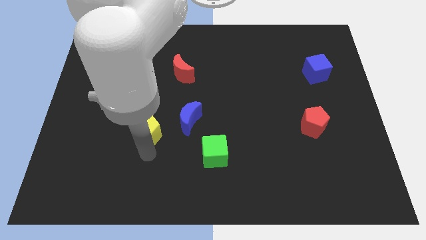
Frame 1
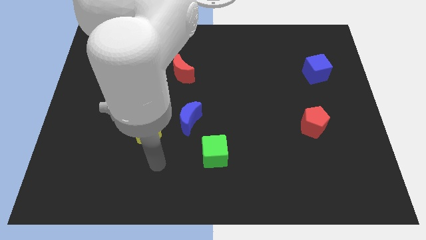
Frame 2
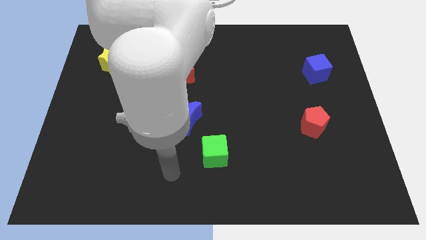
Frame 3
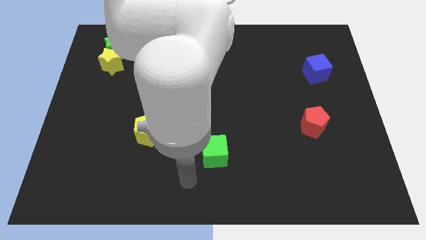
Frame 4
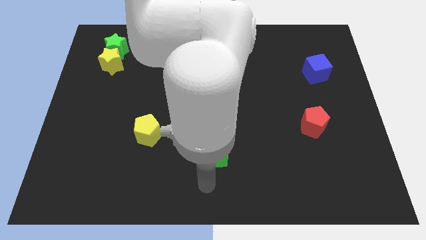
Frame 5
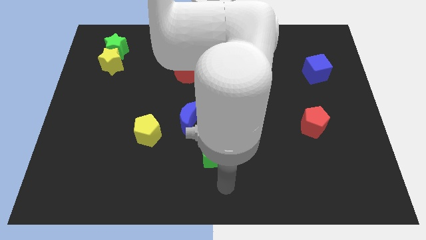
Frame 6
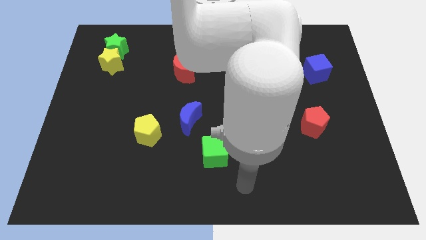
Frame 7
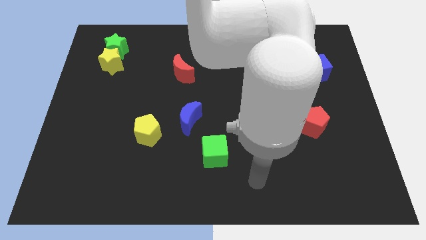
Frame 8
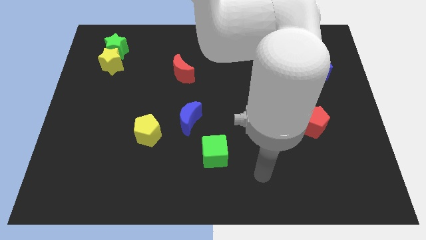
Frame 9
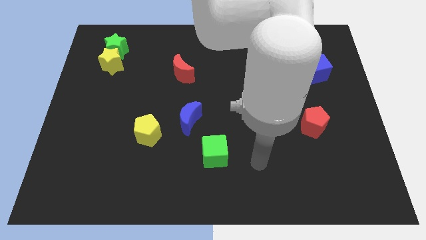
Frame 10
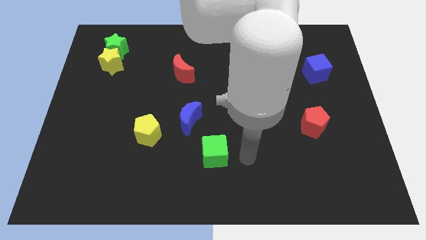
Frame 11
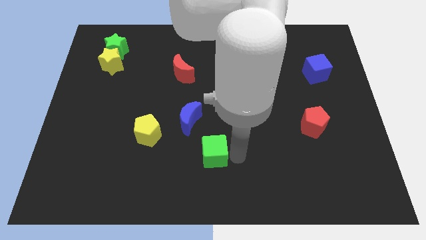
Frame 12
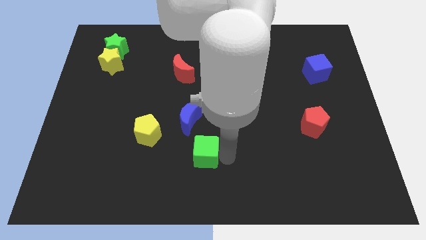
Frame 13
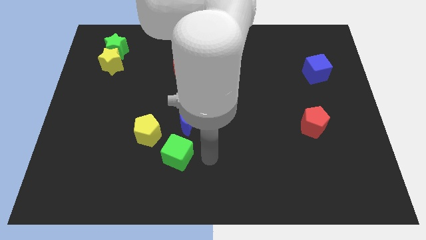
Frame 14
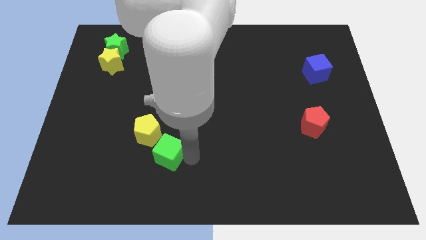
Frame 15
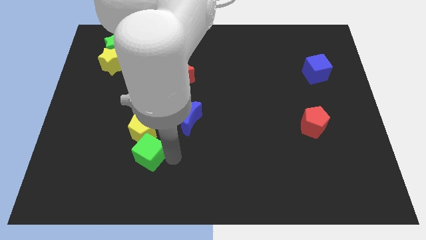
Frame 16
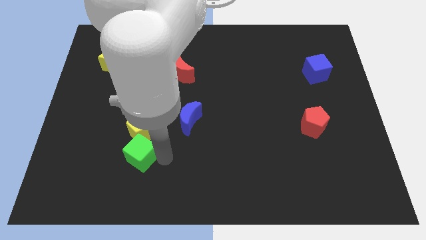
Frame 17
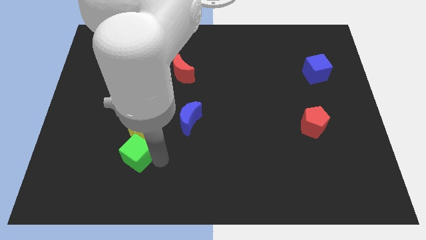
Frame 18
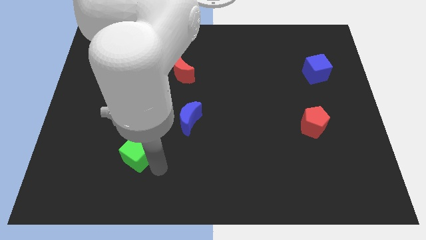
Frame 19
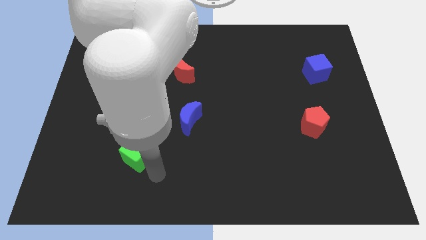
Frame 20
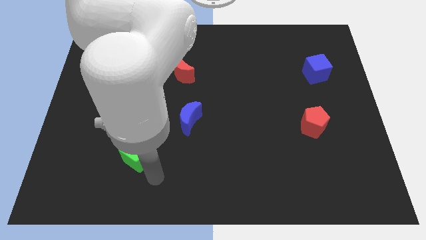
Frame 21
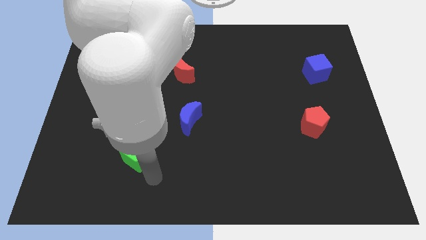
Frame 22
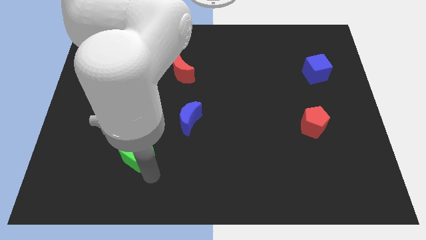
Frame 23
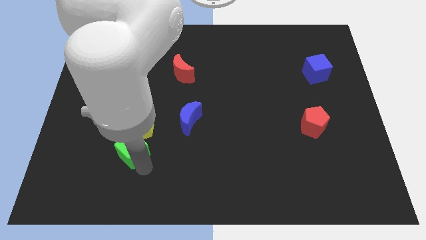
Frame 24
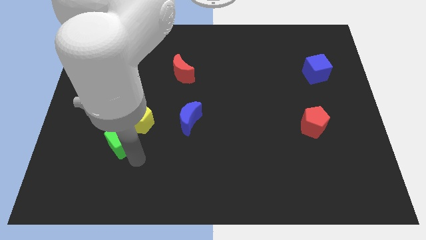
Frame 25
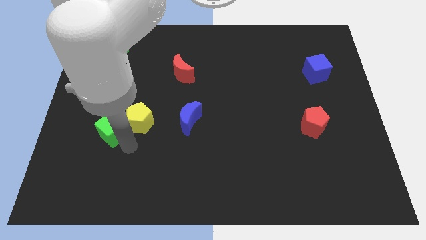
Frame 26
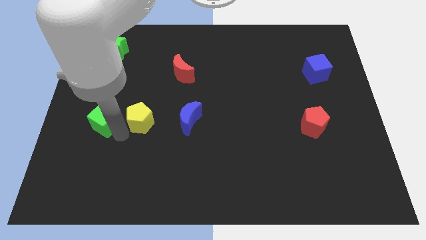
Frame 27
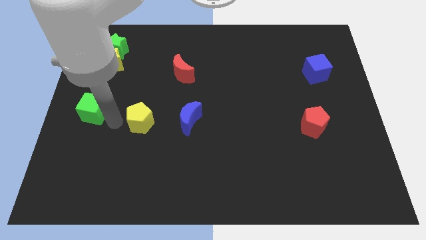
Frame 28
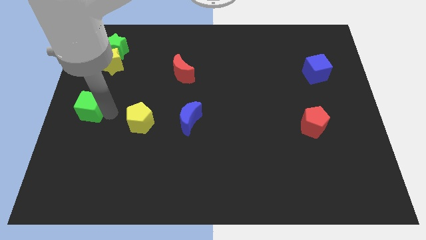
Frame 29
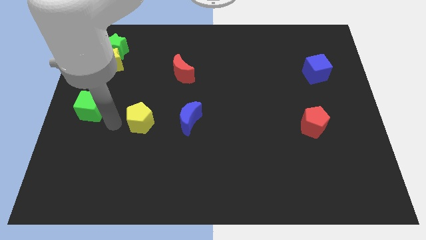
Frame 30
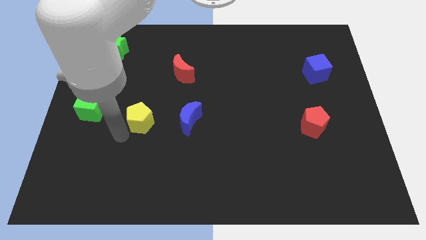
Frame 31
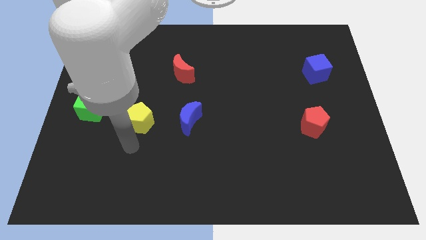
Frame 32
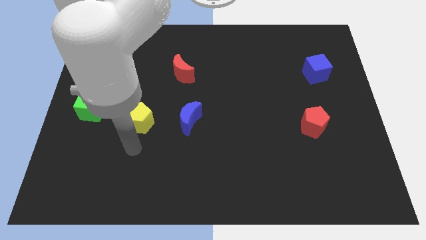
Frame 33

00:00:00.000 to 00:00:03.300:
push green cube to the left center

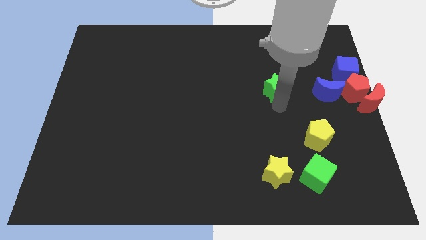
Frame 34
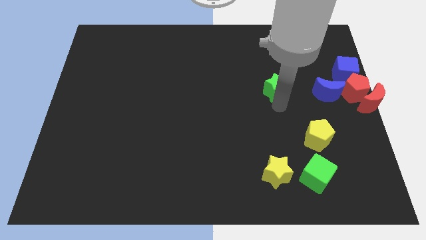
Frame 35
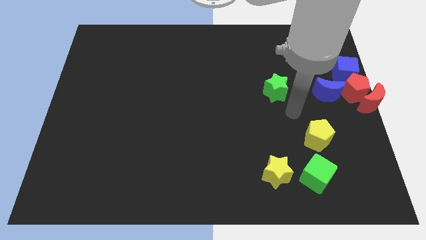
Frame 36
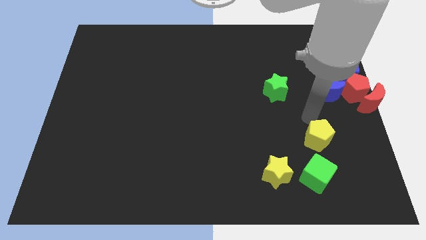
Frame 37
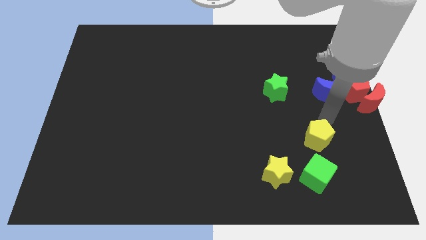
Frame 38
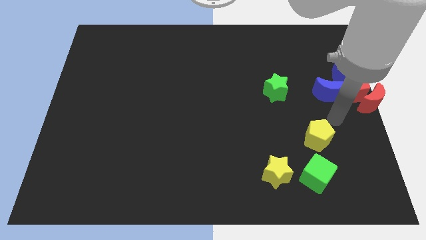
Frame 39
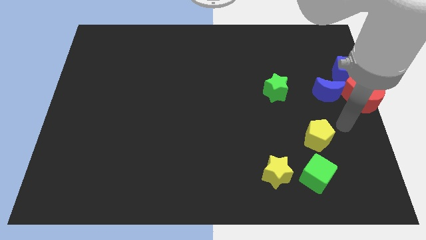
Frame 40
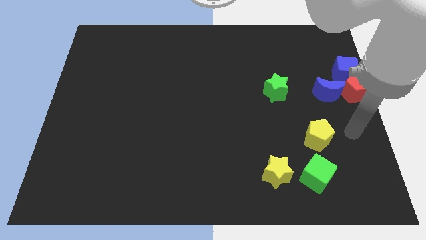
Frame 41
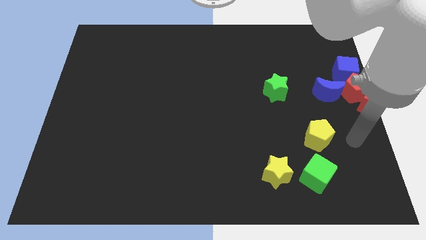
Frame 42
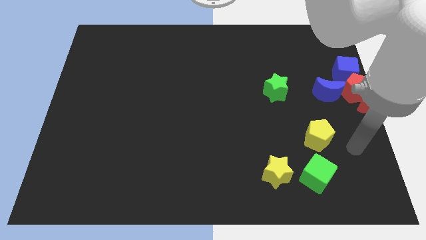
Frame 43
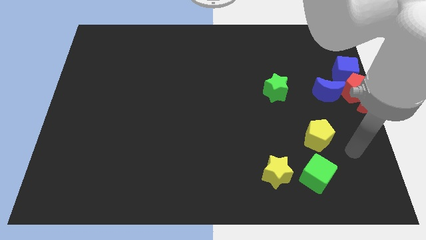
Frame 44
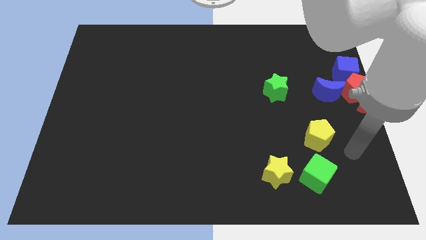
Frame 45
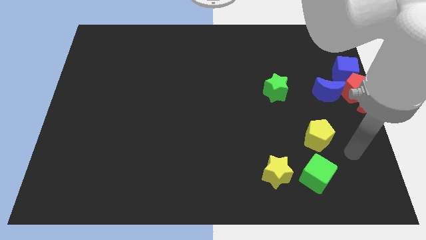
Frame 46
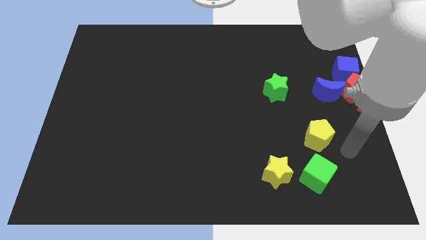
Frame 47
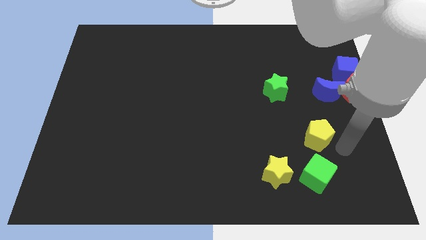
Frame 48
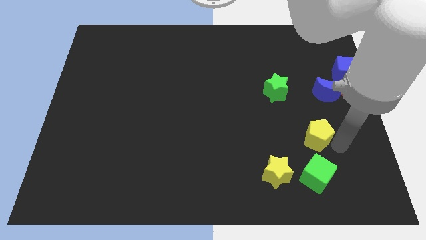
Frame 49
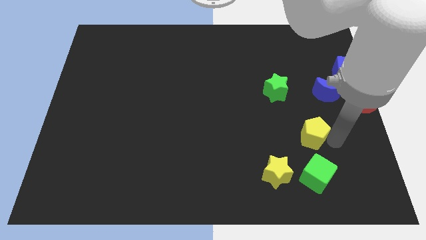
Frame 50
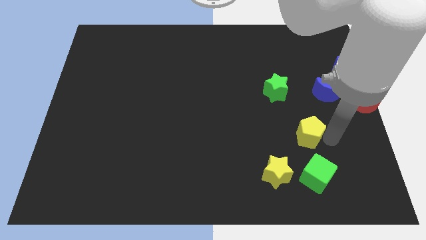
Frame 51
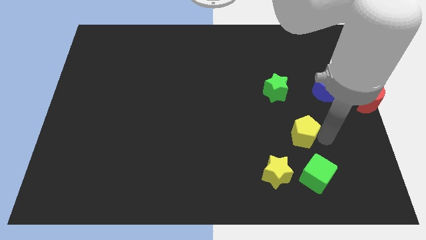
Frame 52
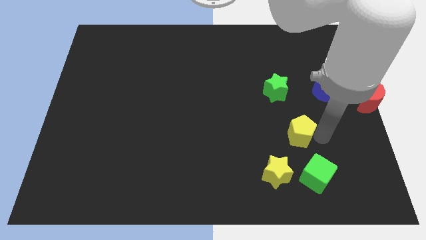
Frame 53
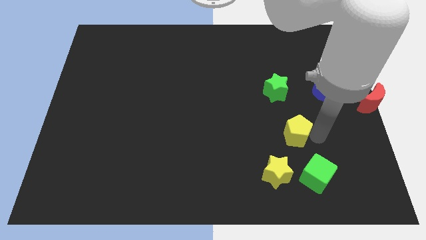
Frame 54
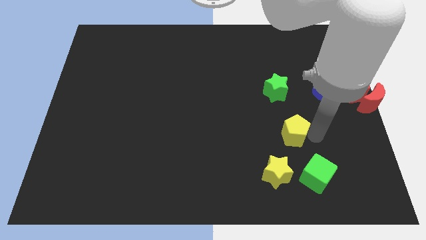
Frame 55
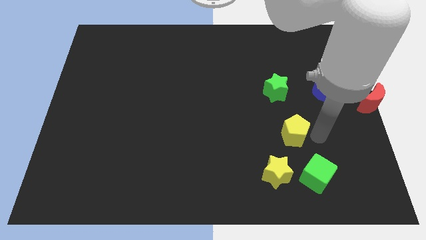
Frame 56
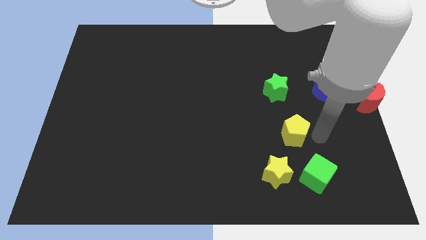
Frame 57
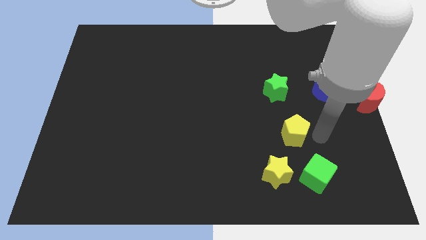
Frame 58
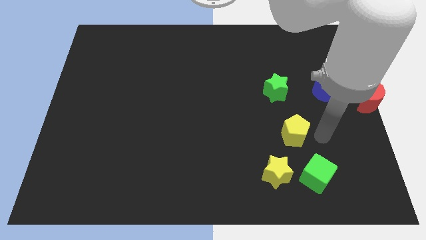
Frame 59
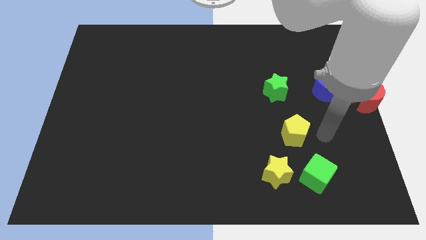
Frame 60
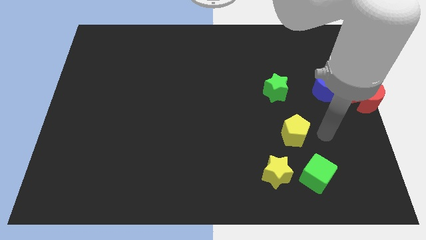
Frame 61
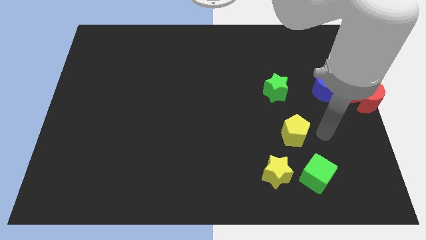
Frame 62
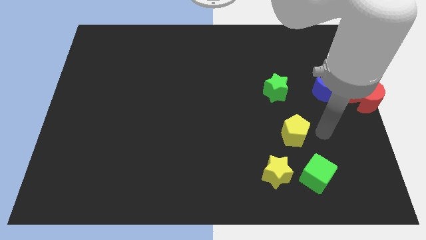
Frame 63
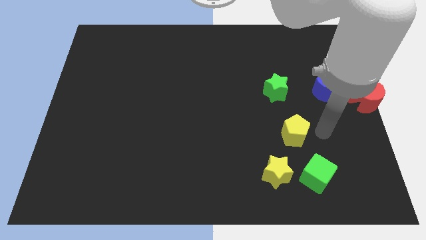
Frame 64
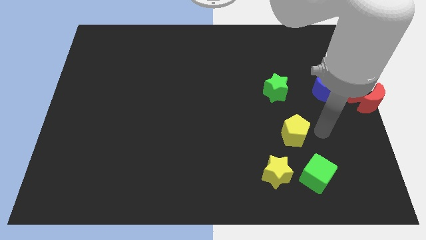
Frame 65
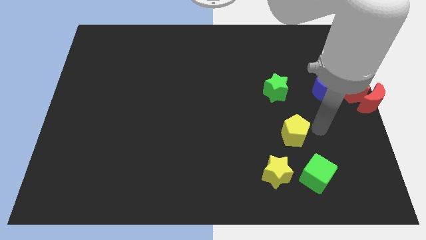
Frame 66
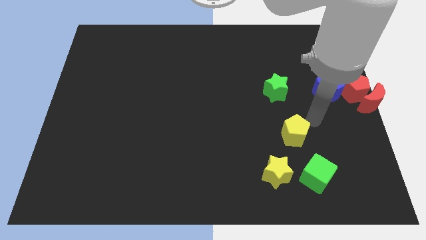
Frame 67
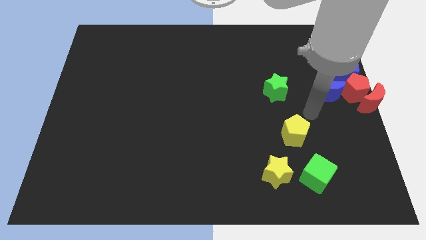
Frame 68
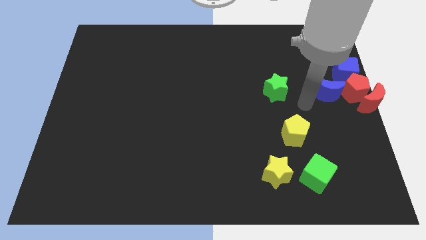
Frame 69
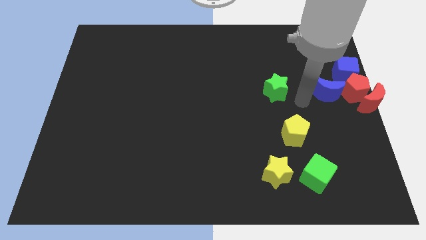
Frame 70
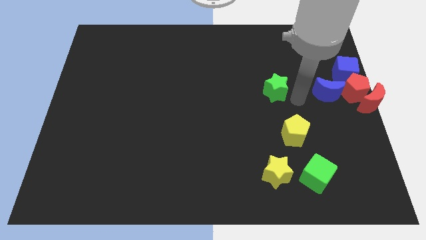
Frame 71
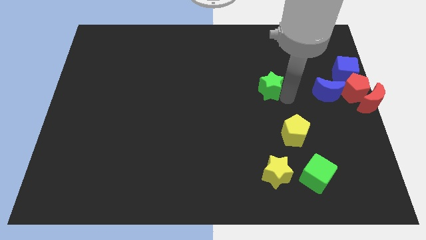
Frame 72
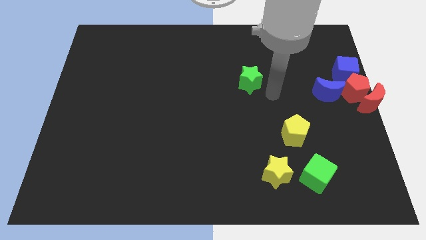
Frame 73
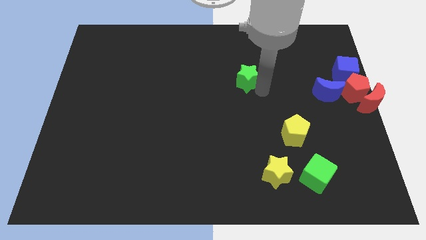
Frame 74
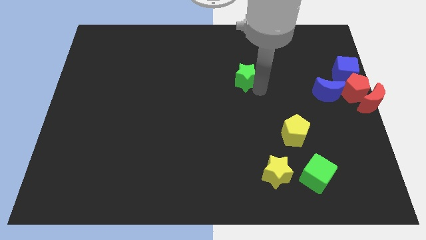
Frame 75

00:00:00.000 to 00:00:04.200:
push green star towards top

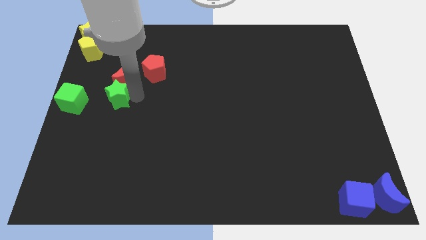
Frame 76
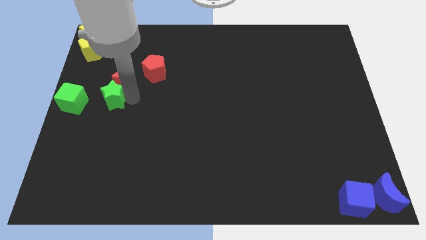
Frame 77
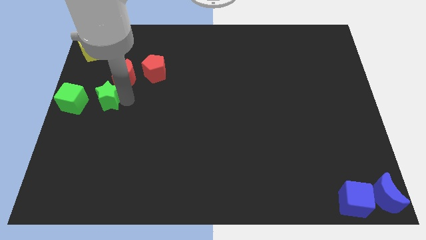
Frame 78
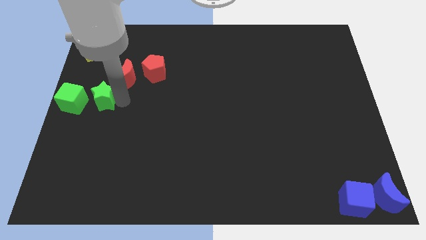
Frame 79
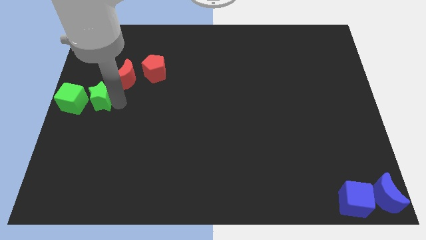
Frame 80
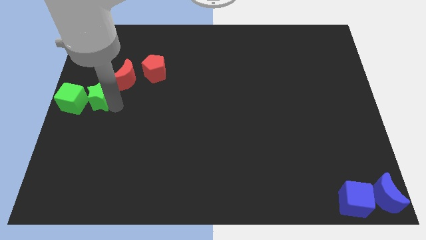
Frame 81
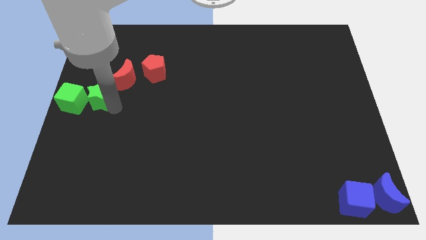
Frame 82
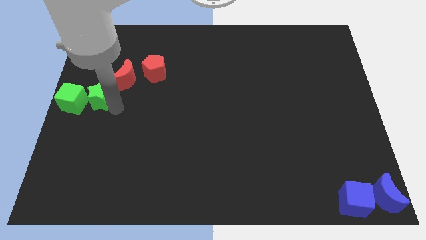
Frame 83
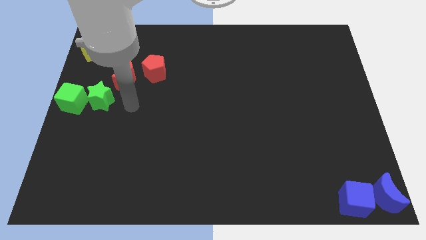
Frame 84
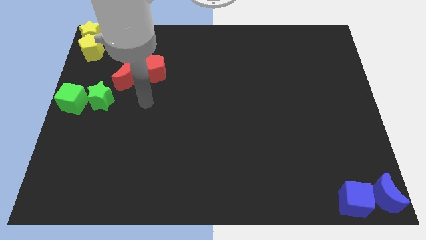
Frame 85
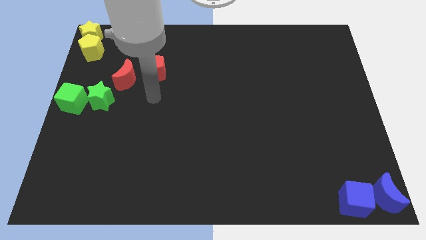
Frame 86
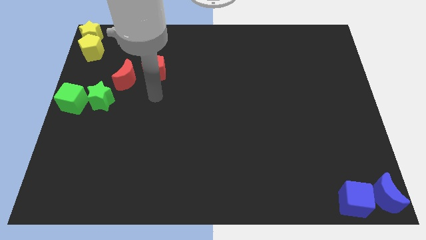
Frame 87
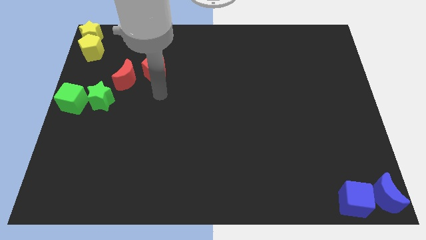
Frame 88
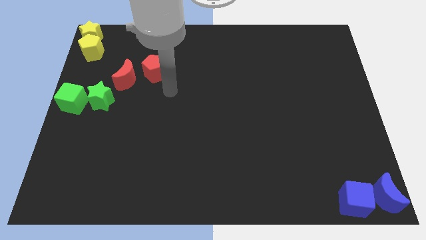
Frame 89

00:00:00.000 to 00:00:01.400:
place the green star to right of green cube
